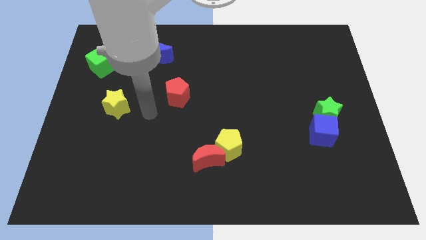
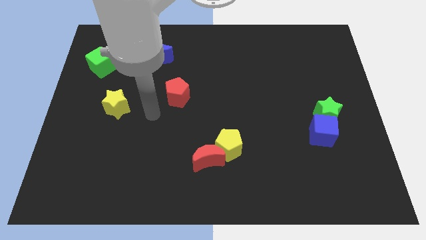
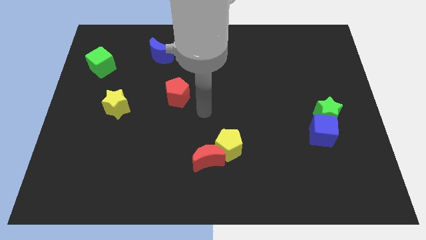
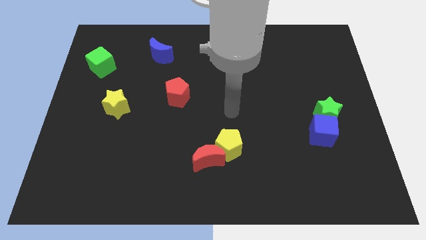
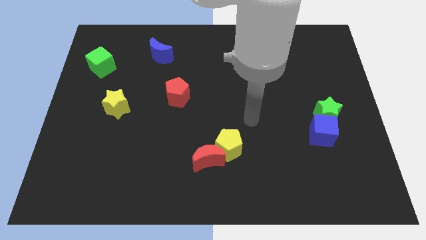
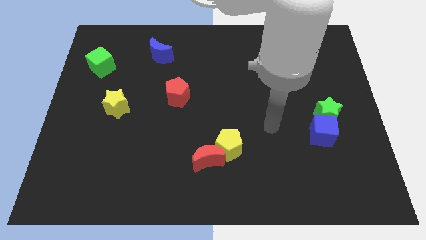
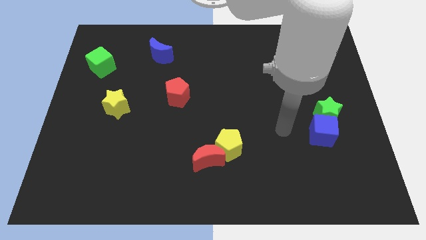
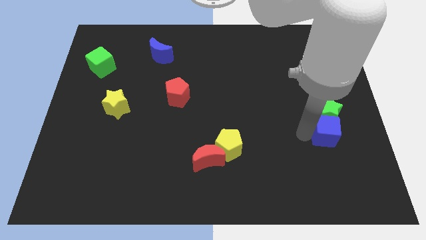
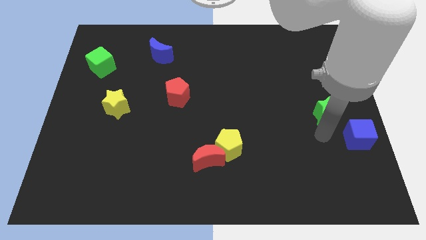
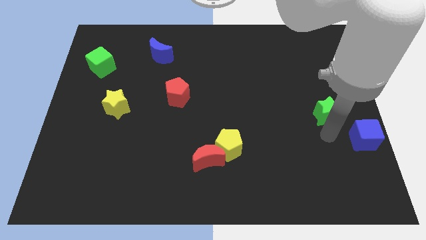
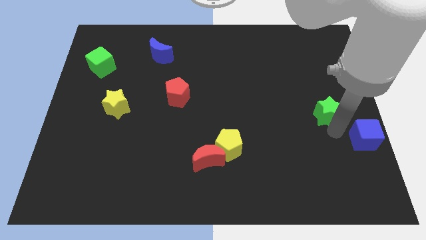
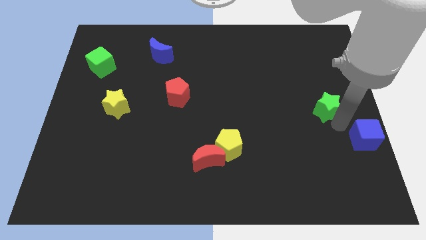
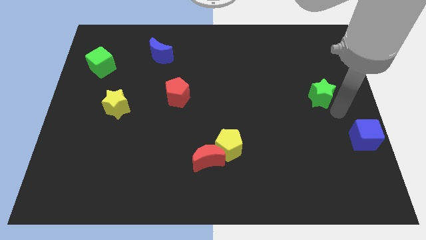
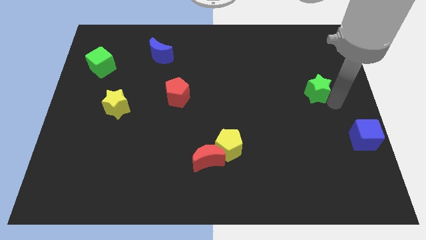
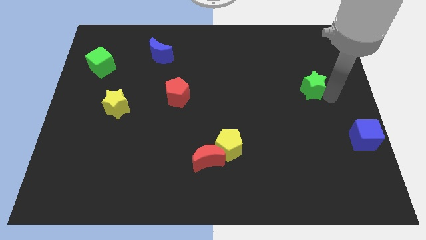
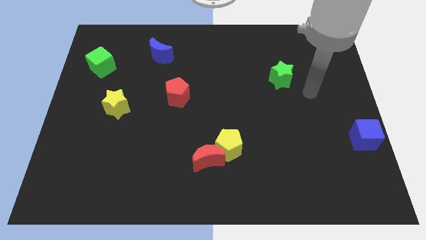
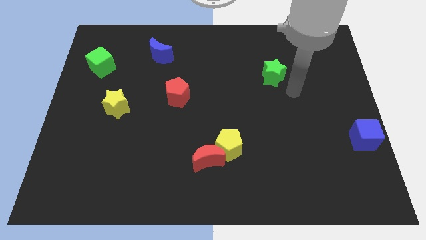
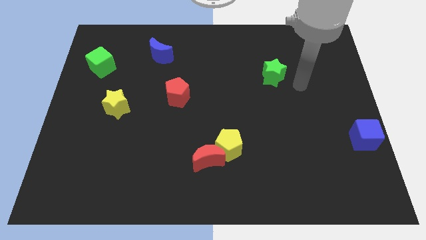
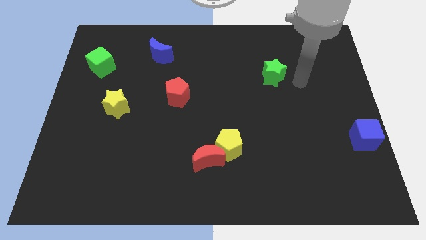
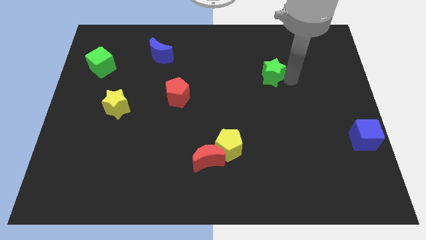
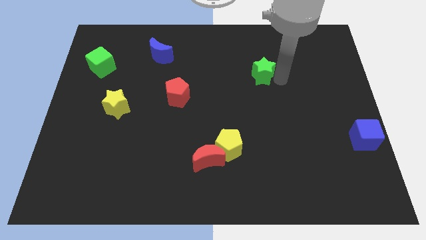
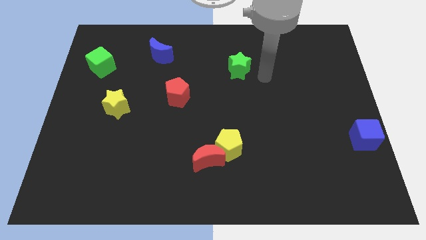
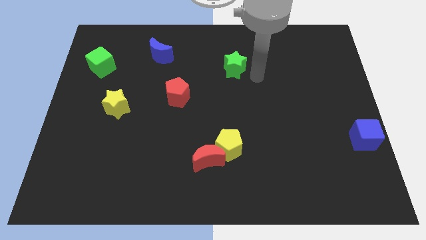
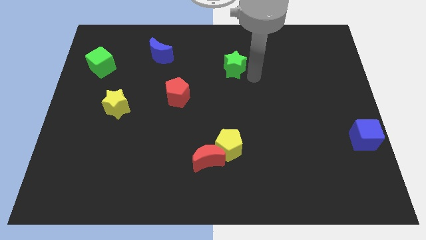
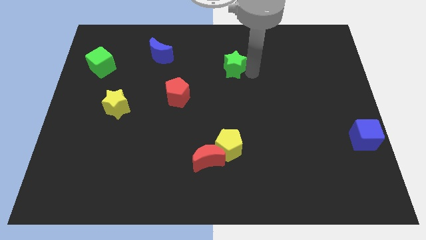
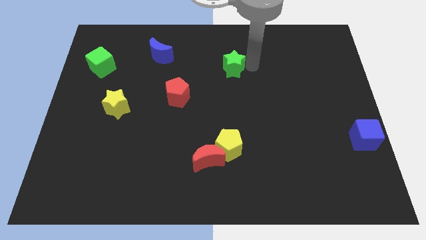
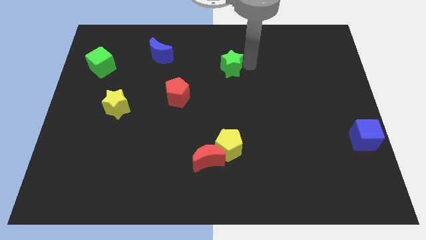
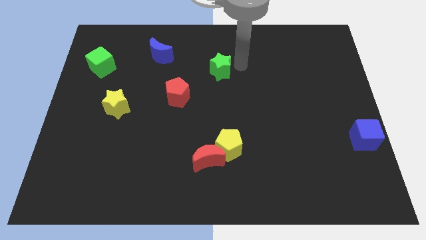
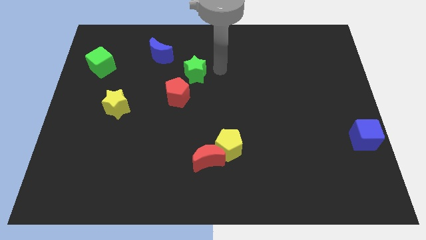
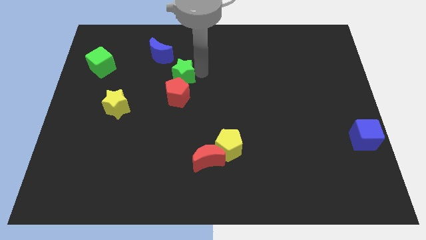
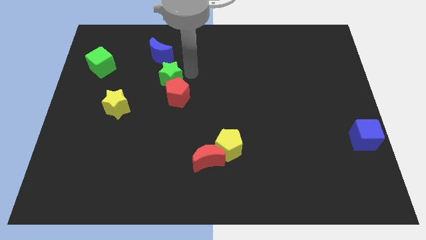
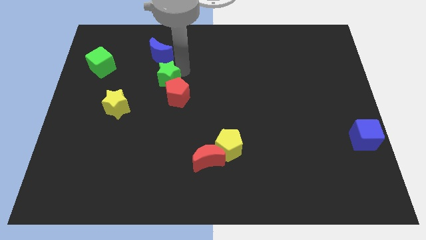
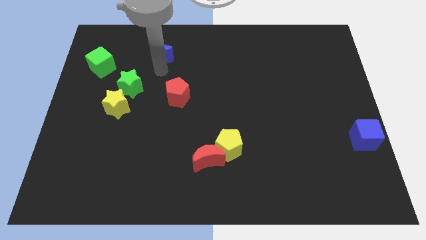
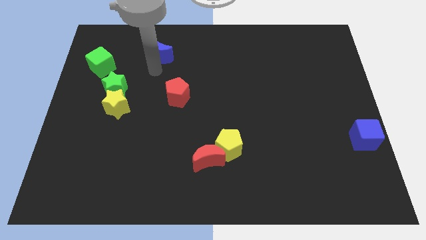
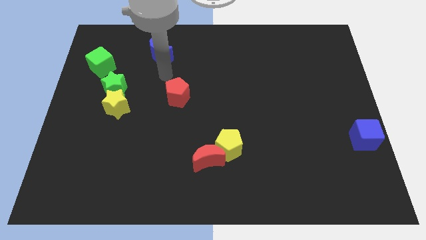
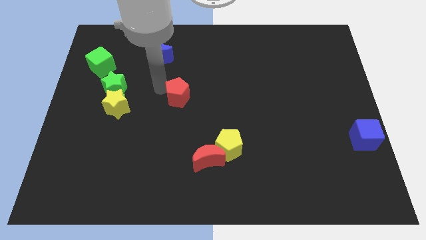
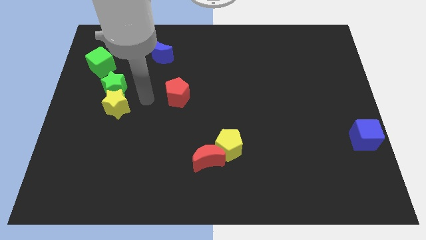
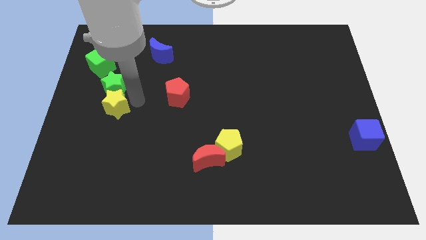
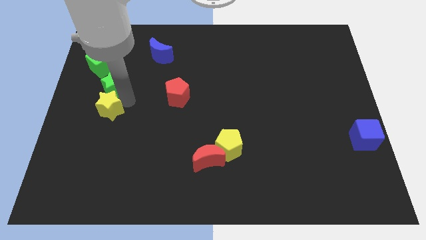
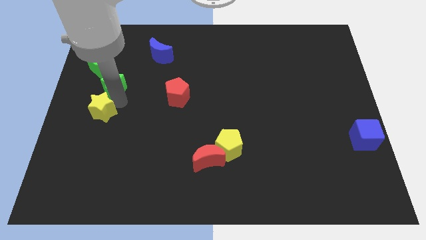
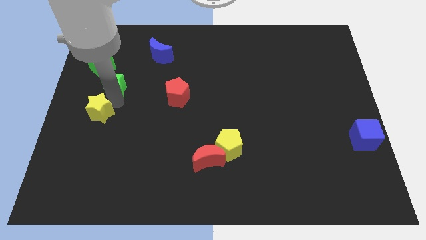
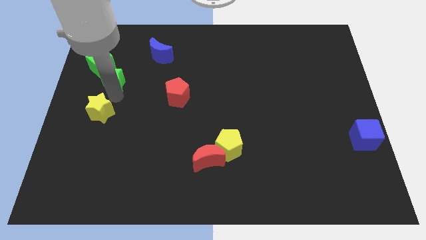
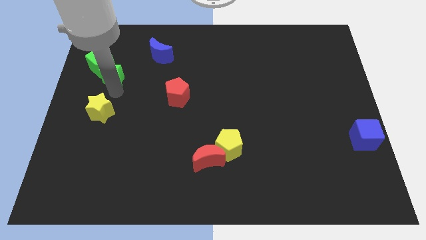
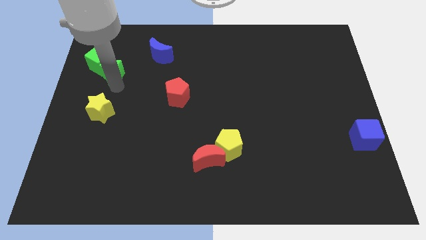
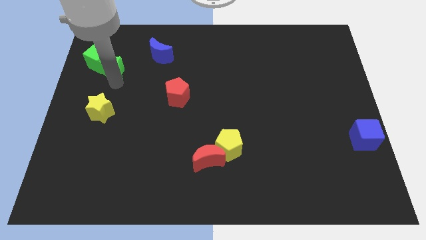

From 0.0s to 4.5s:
move the green star to the green cube

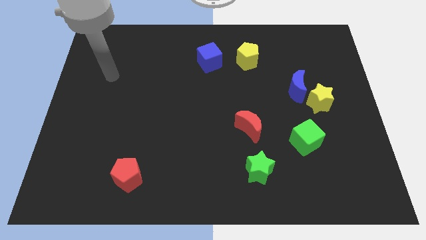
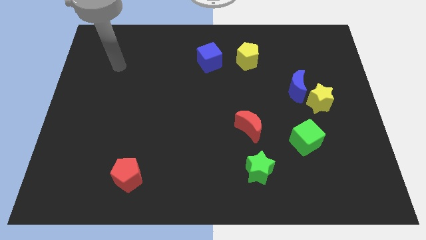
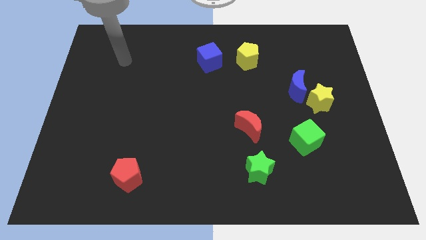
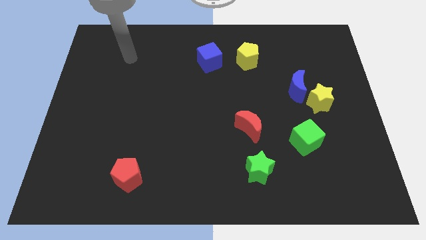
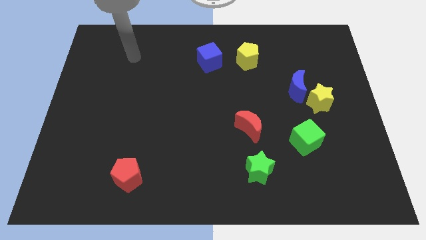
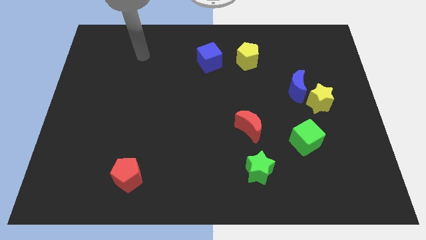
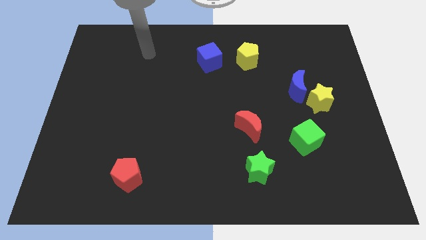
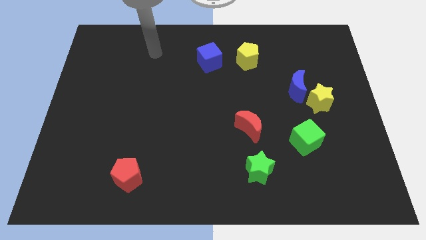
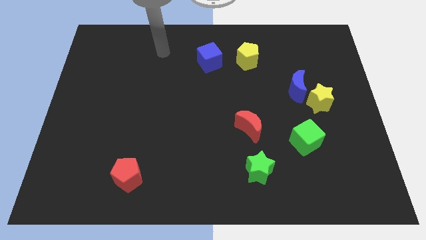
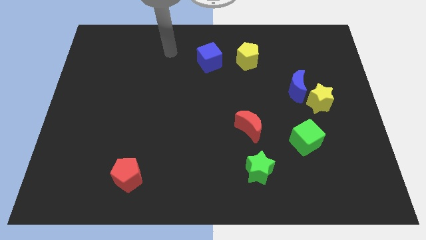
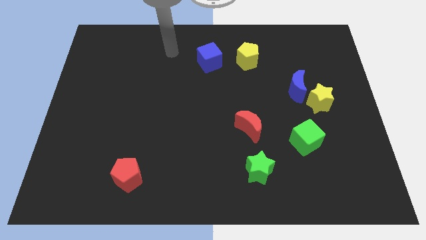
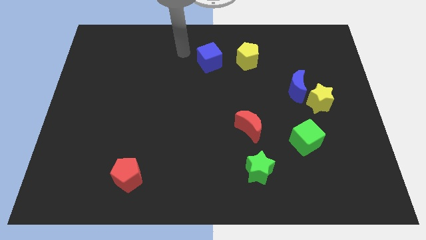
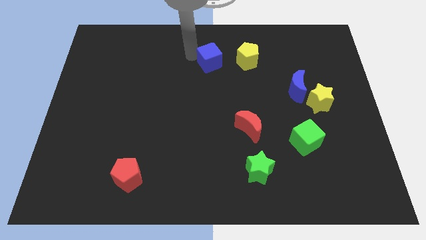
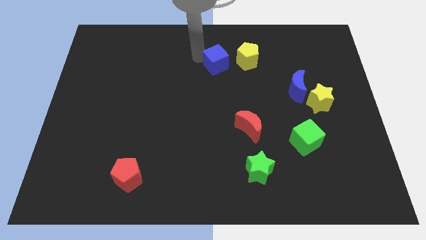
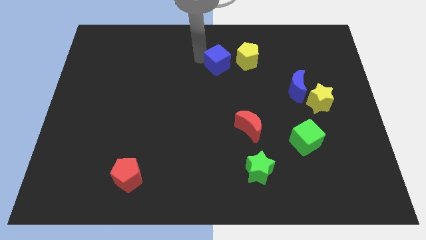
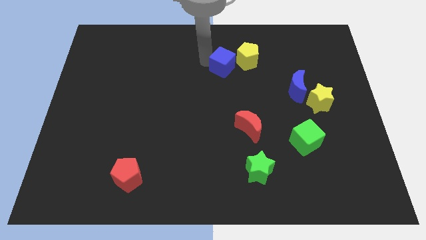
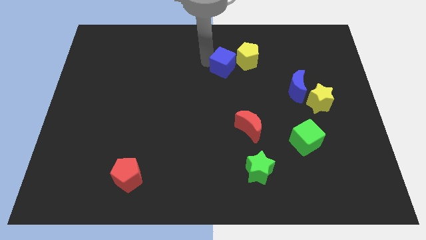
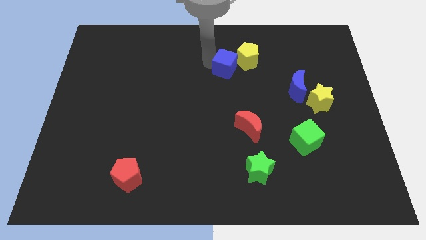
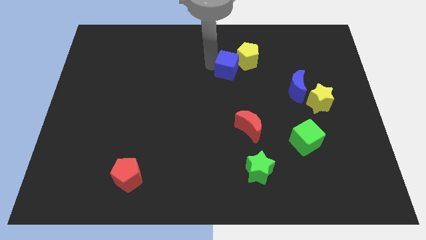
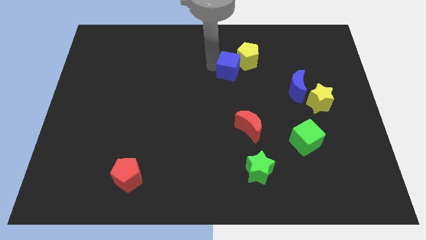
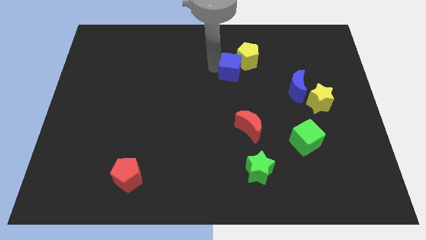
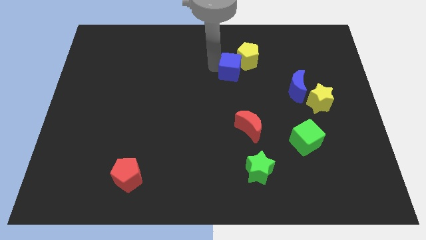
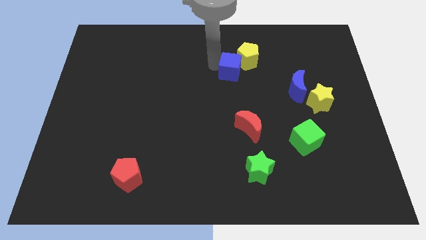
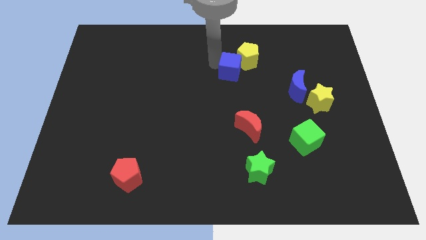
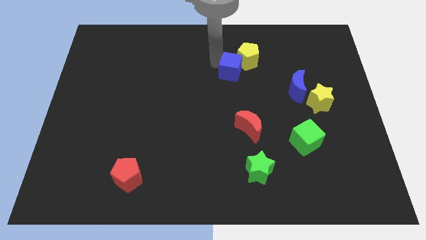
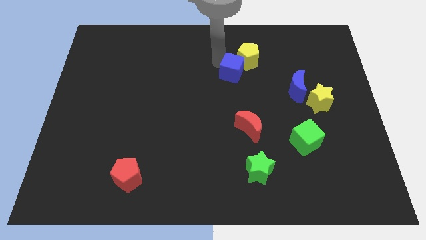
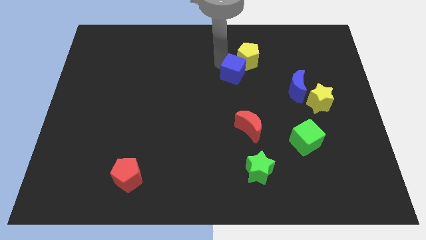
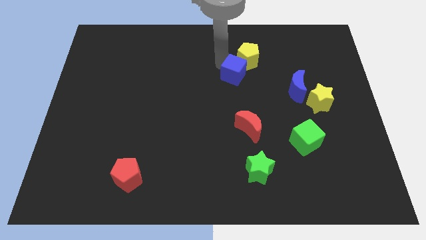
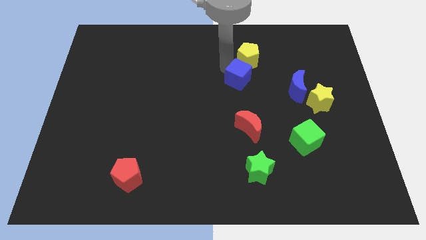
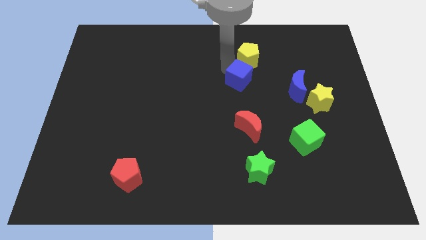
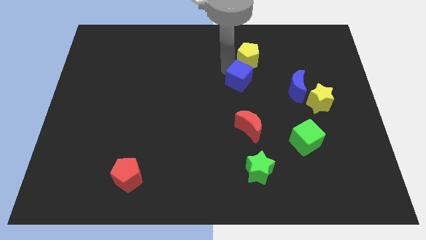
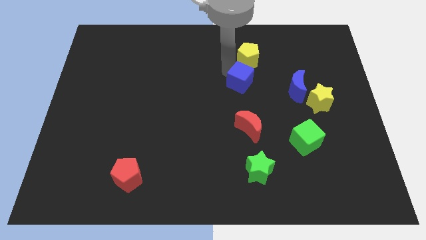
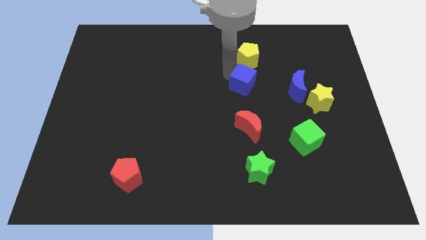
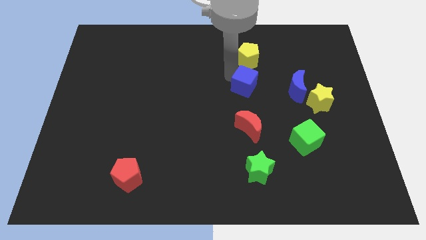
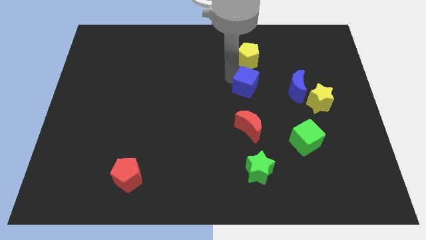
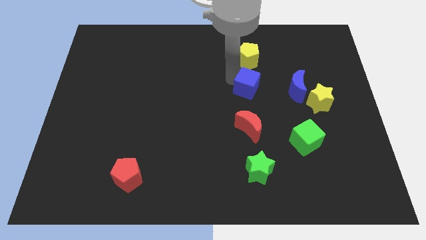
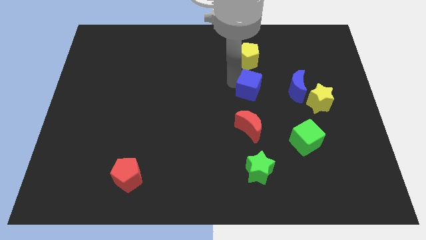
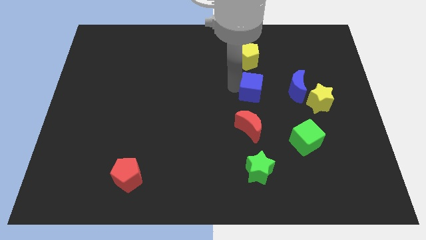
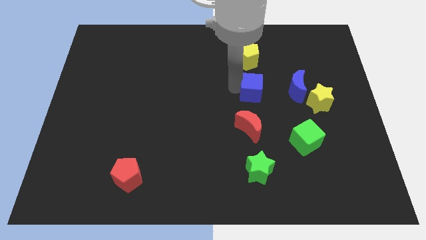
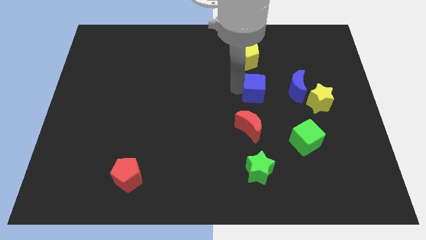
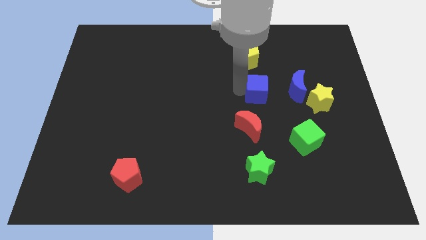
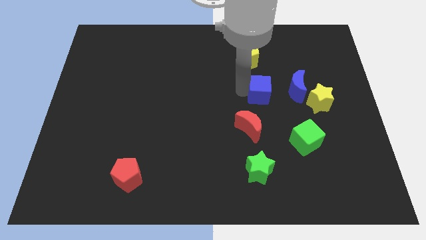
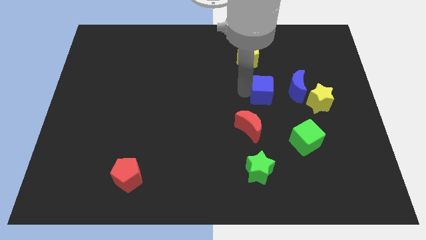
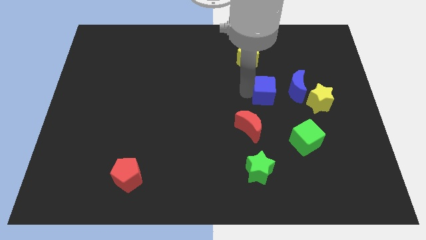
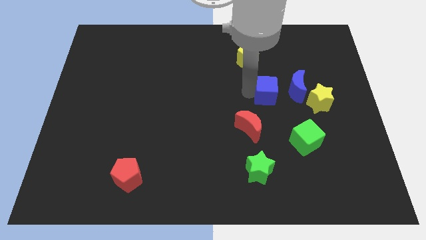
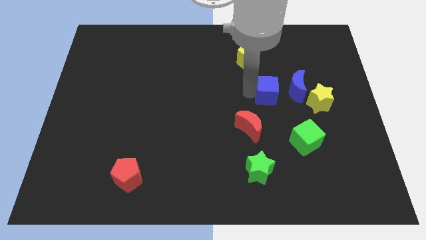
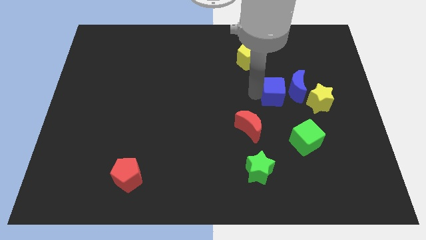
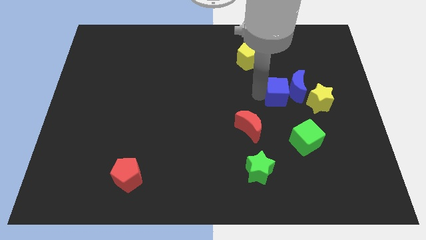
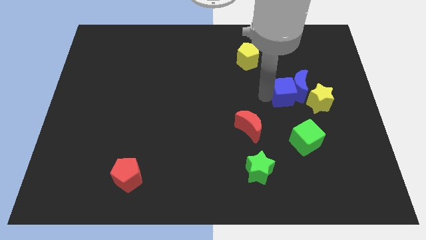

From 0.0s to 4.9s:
slide the blue cube next to the blue moon
